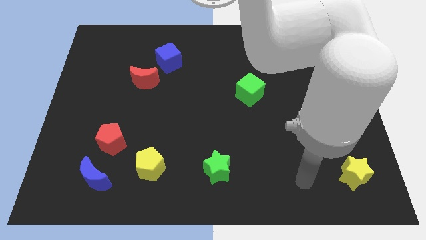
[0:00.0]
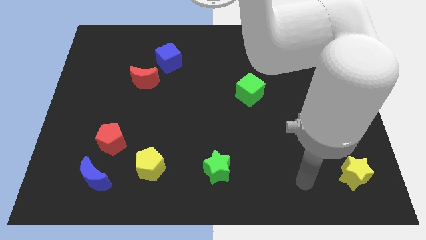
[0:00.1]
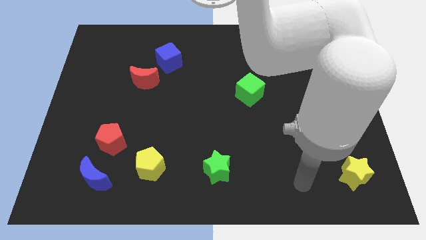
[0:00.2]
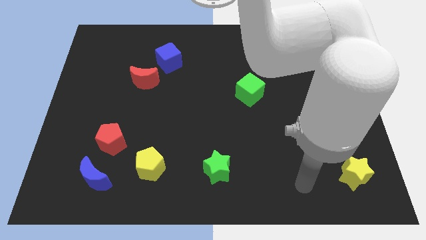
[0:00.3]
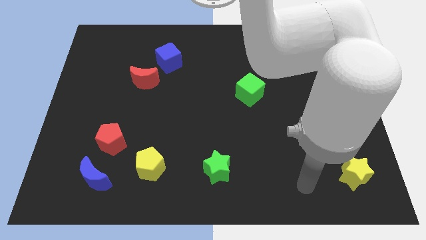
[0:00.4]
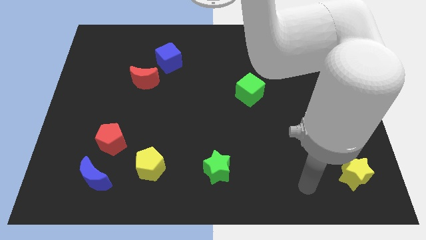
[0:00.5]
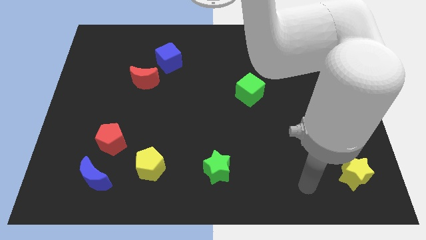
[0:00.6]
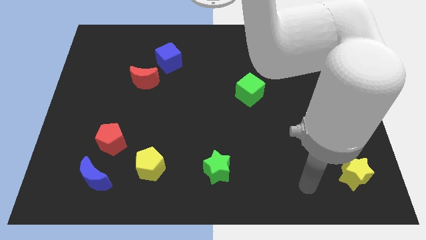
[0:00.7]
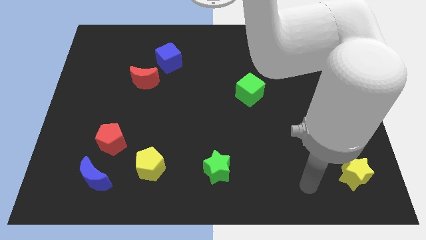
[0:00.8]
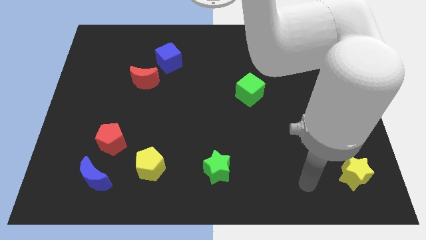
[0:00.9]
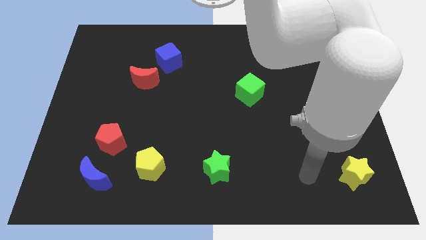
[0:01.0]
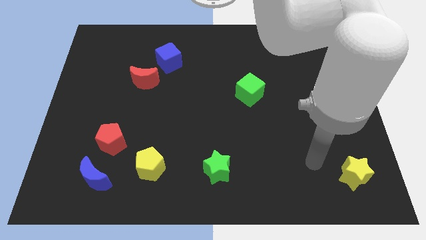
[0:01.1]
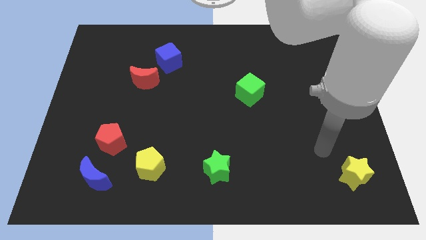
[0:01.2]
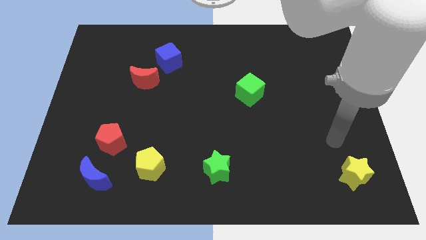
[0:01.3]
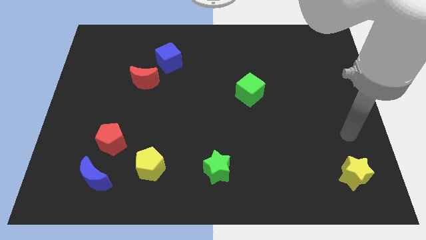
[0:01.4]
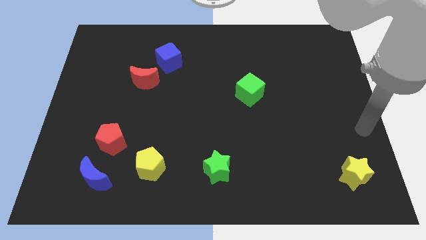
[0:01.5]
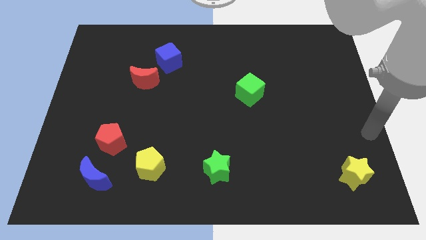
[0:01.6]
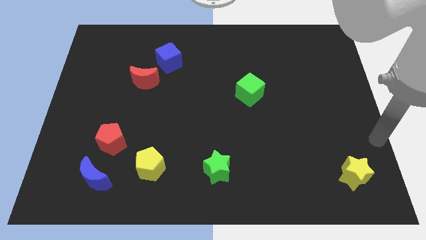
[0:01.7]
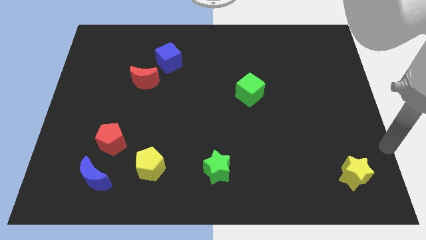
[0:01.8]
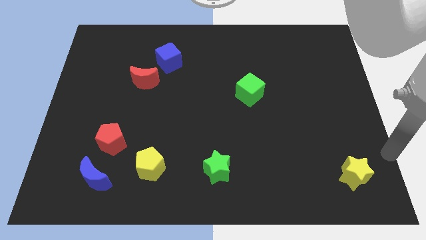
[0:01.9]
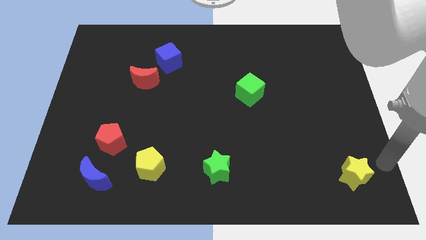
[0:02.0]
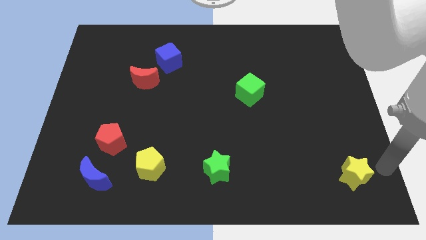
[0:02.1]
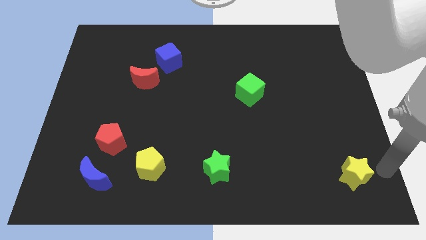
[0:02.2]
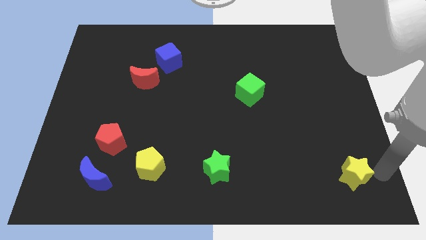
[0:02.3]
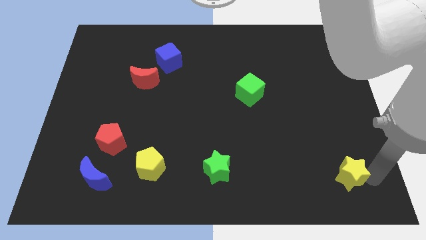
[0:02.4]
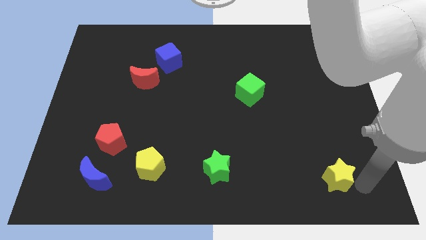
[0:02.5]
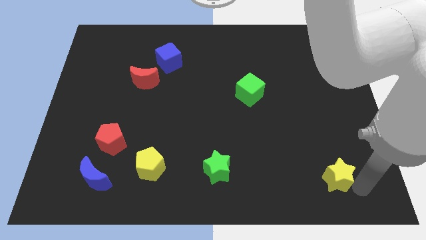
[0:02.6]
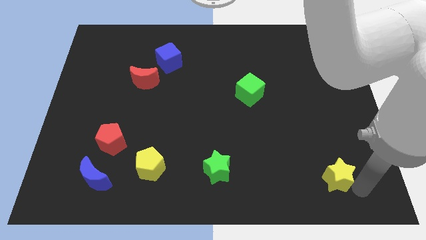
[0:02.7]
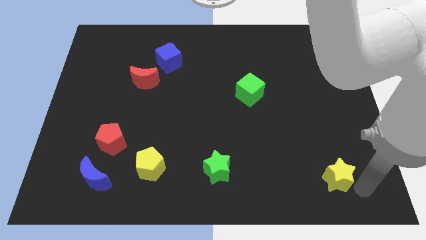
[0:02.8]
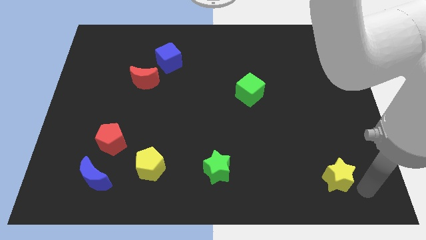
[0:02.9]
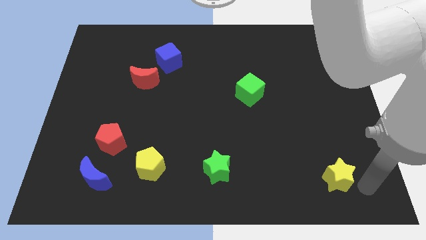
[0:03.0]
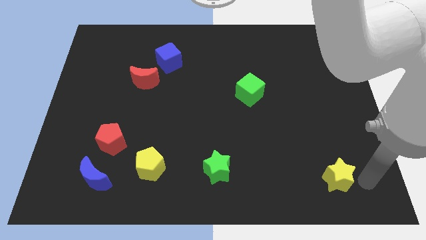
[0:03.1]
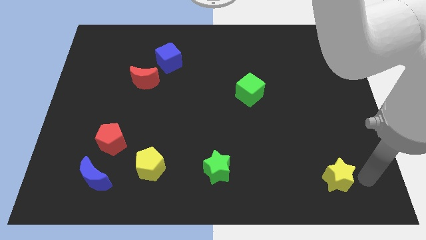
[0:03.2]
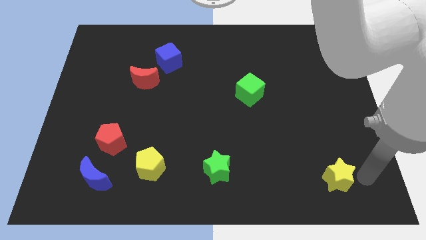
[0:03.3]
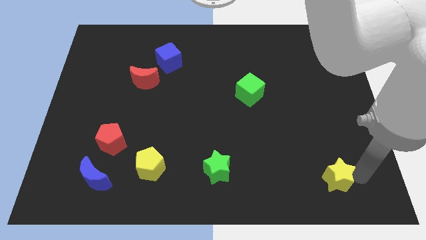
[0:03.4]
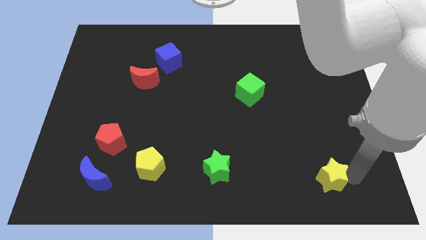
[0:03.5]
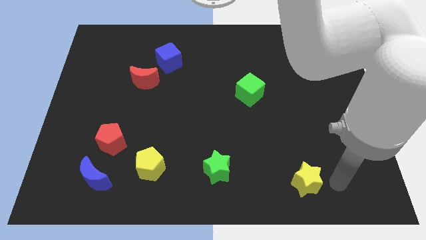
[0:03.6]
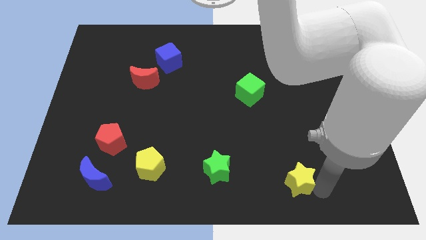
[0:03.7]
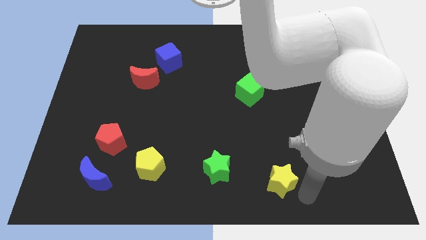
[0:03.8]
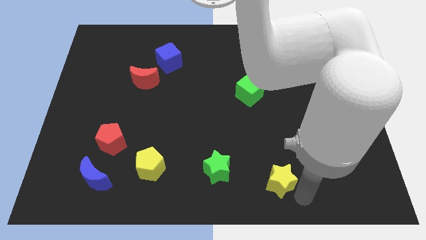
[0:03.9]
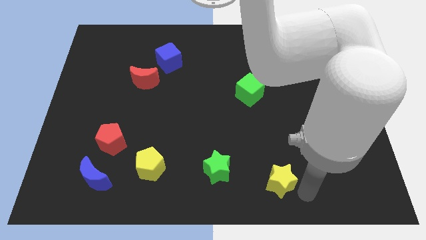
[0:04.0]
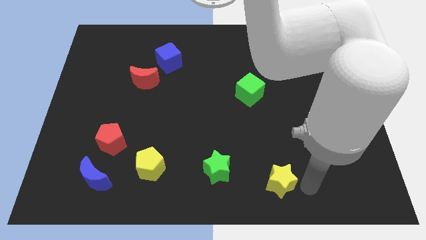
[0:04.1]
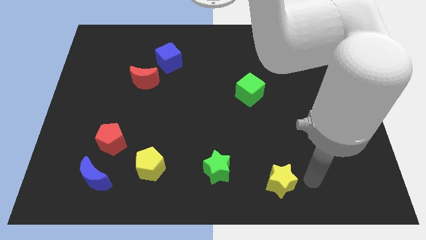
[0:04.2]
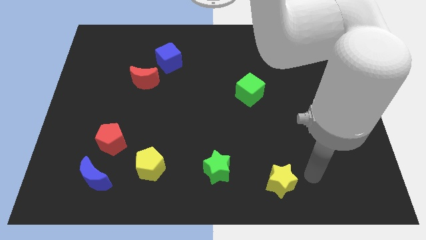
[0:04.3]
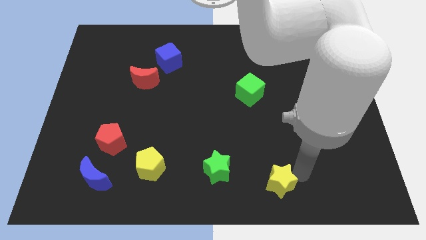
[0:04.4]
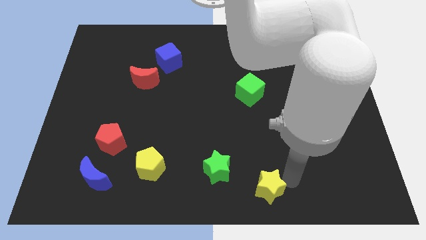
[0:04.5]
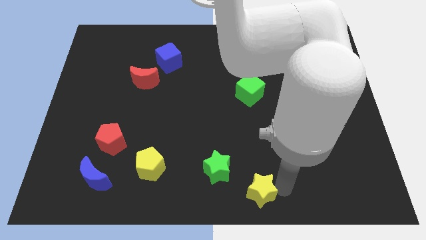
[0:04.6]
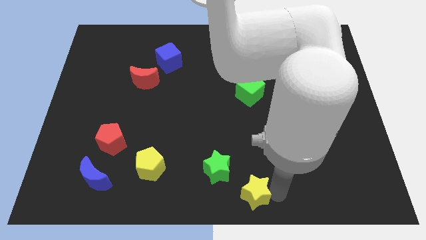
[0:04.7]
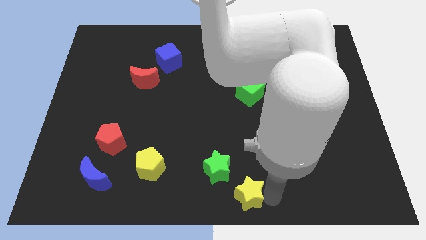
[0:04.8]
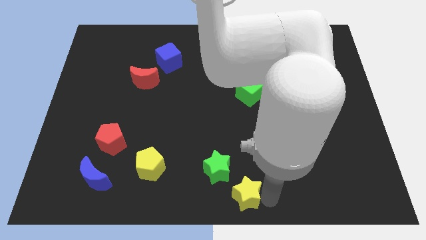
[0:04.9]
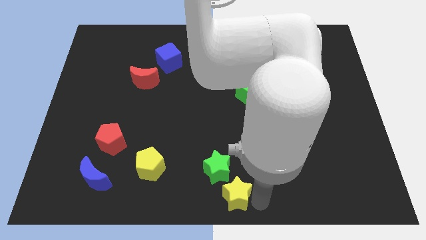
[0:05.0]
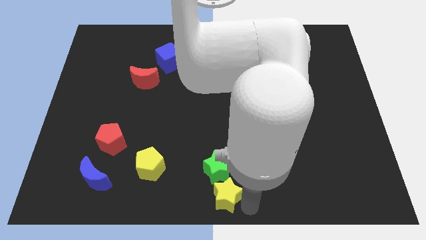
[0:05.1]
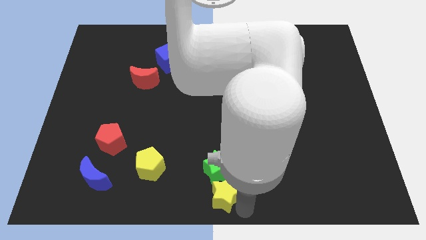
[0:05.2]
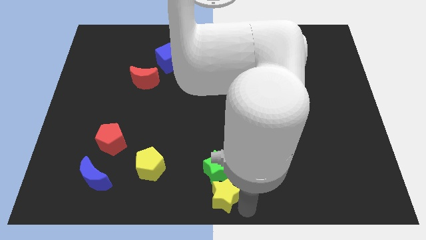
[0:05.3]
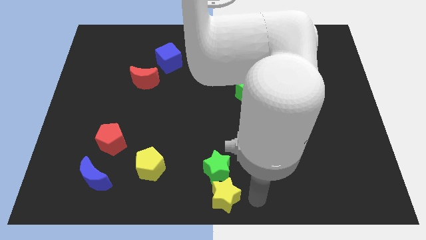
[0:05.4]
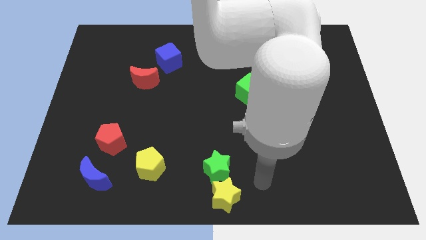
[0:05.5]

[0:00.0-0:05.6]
move the yellow star towards the bottom center of the board

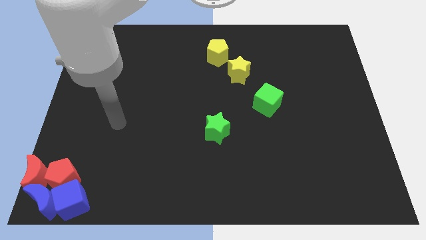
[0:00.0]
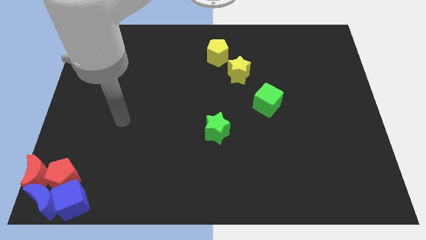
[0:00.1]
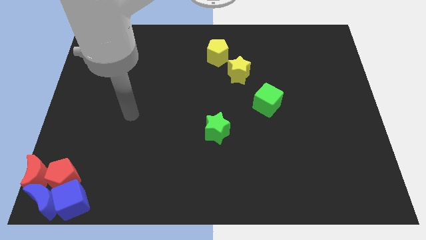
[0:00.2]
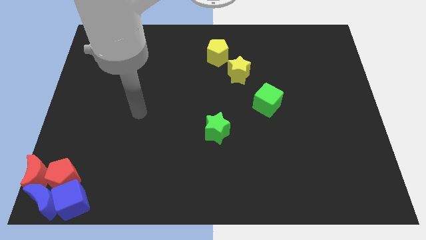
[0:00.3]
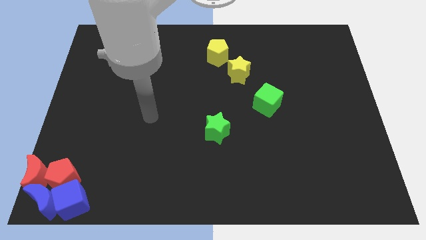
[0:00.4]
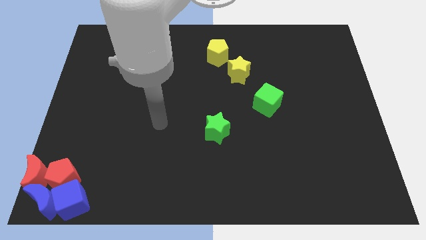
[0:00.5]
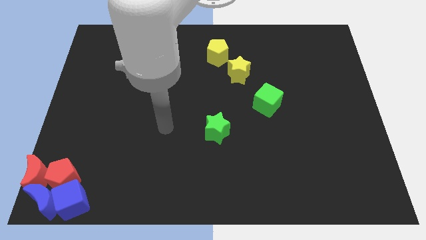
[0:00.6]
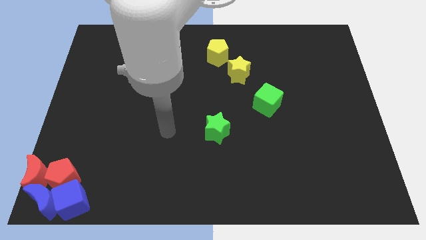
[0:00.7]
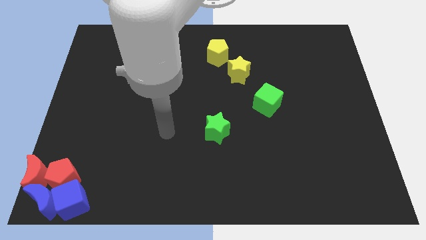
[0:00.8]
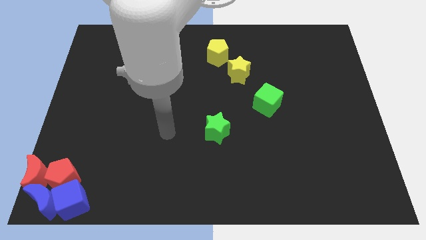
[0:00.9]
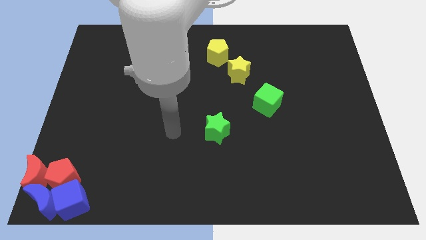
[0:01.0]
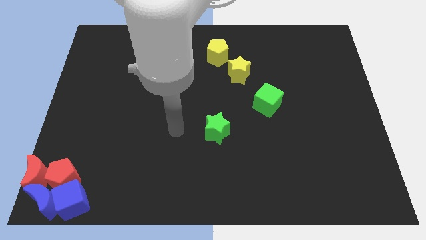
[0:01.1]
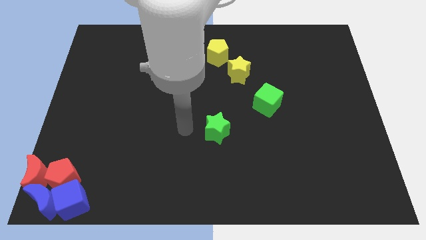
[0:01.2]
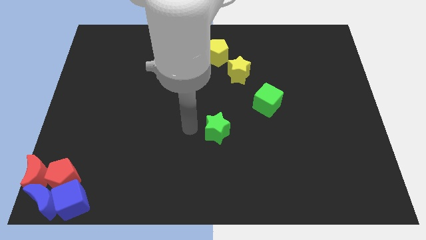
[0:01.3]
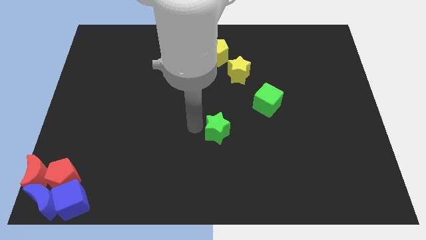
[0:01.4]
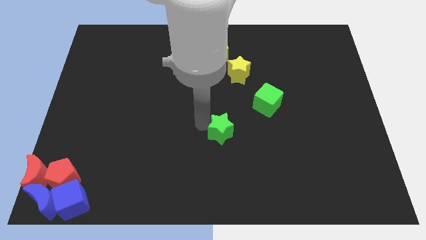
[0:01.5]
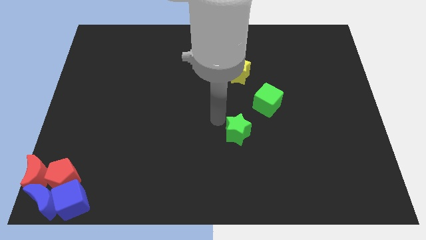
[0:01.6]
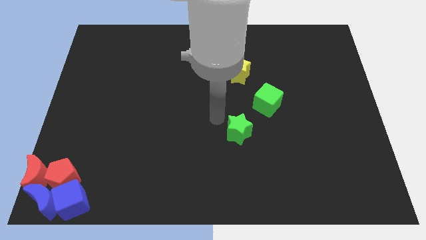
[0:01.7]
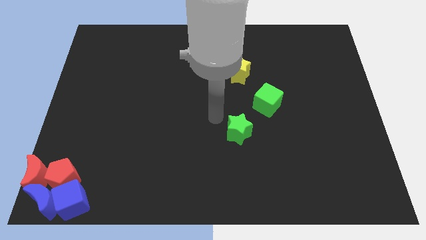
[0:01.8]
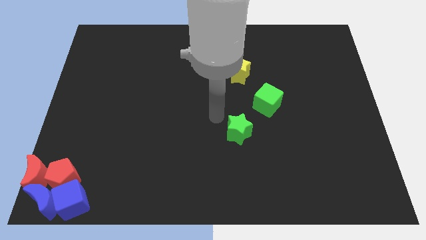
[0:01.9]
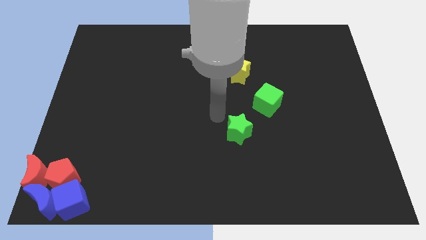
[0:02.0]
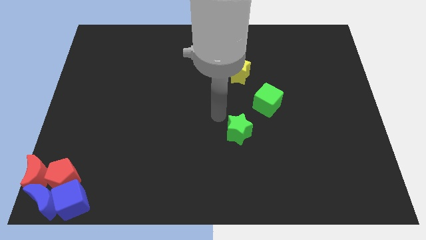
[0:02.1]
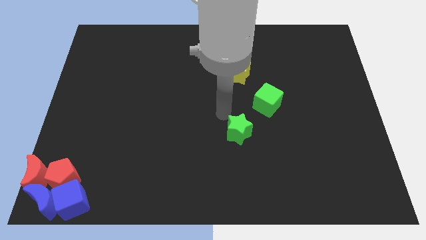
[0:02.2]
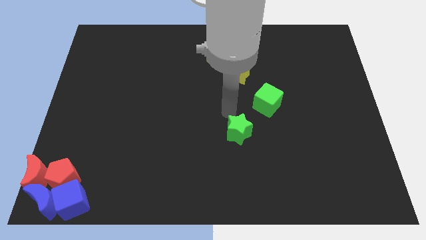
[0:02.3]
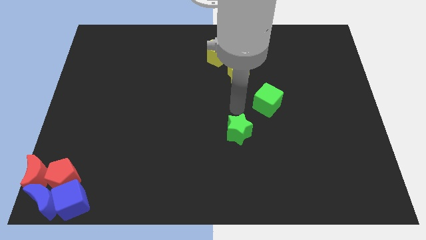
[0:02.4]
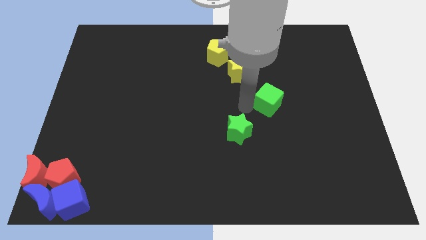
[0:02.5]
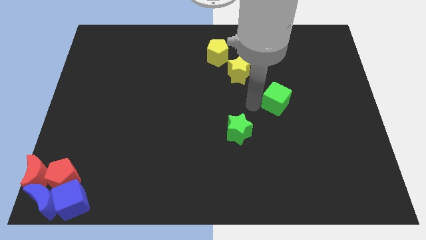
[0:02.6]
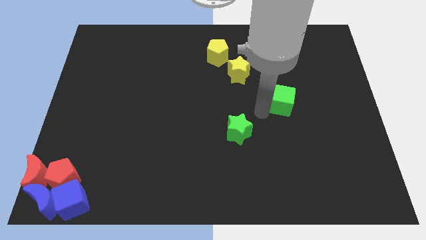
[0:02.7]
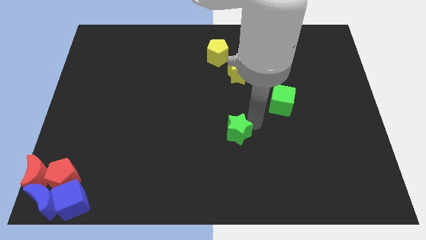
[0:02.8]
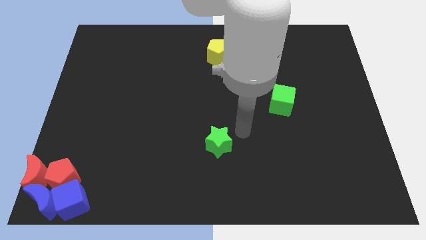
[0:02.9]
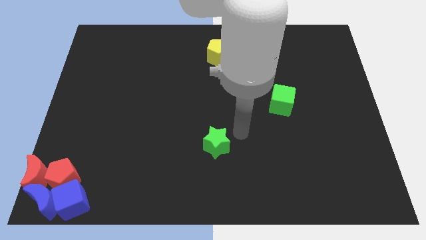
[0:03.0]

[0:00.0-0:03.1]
place your hand in between green star and green cube

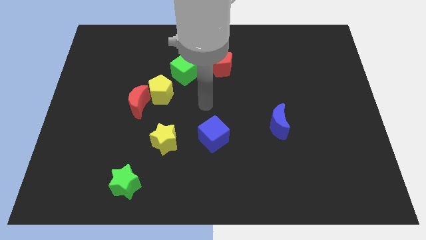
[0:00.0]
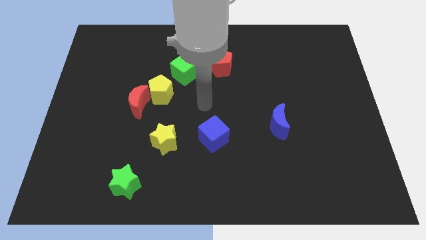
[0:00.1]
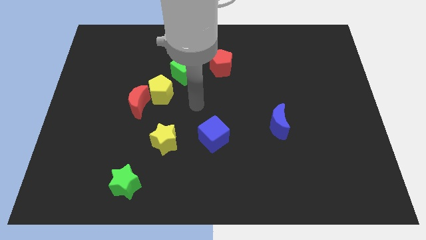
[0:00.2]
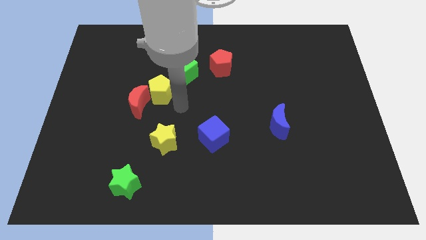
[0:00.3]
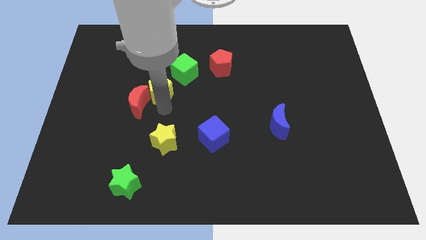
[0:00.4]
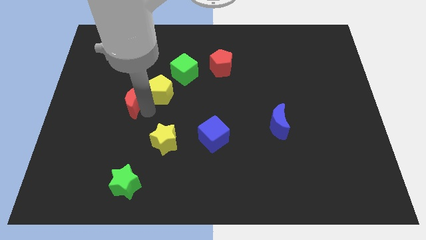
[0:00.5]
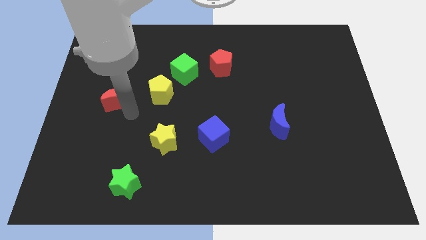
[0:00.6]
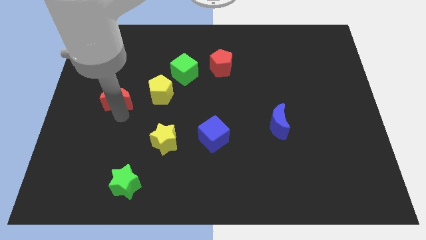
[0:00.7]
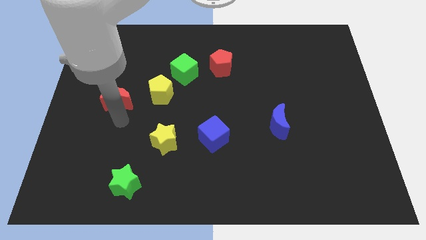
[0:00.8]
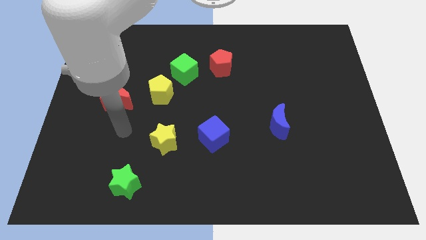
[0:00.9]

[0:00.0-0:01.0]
touch the bottom of red moon
